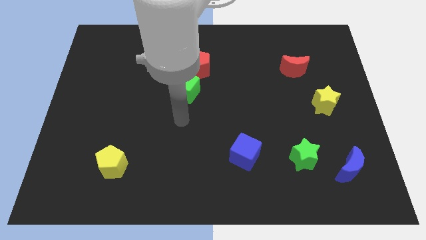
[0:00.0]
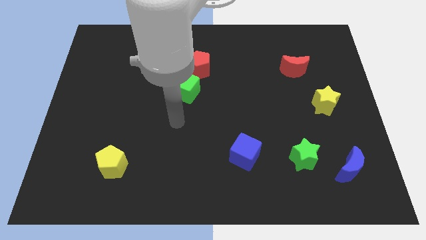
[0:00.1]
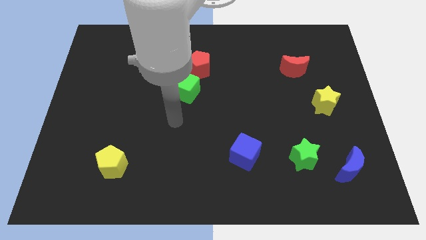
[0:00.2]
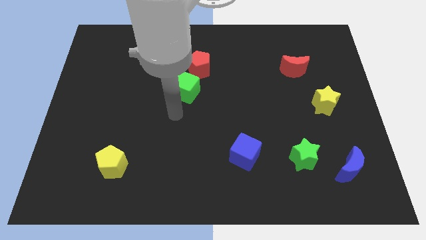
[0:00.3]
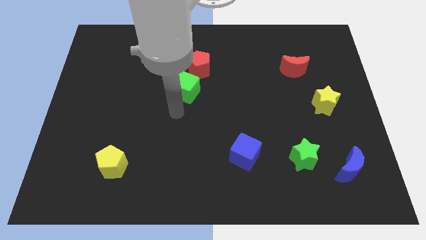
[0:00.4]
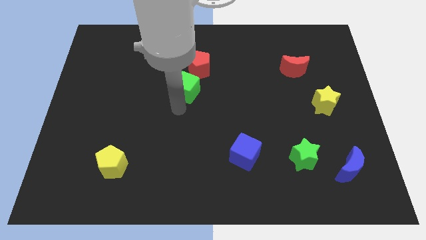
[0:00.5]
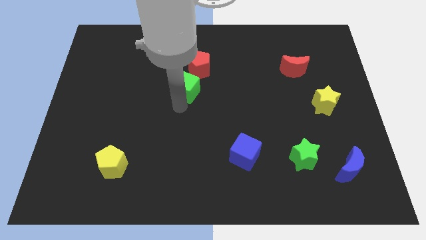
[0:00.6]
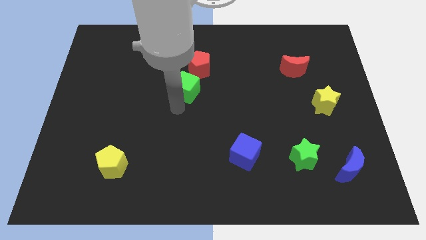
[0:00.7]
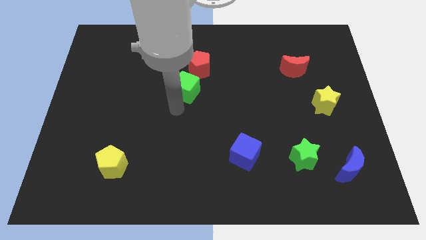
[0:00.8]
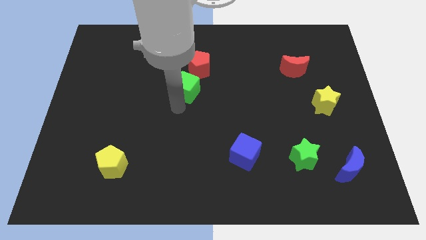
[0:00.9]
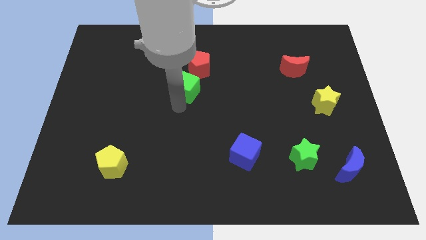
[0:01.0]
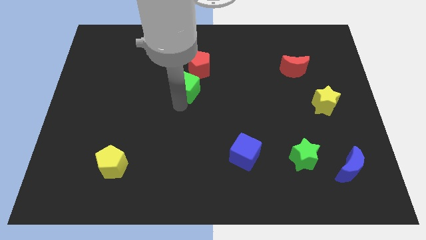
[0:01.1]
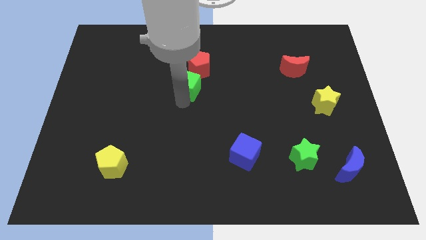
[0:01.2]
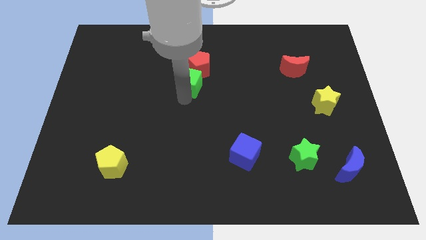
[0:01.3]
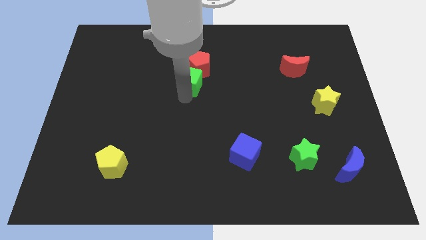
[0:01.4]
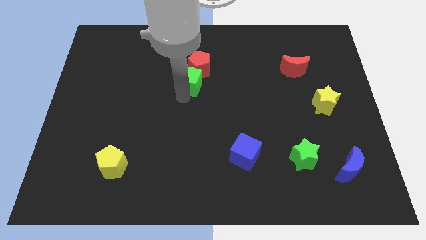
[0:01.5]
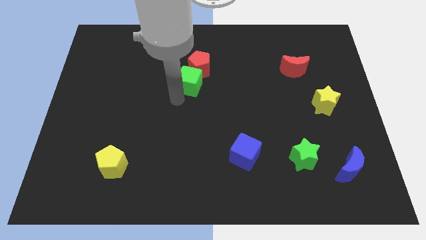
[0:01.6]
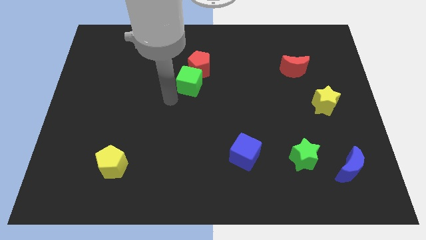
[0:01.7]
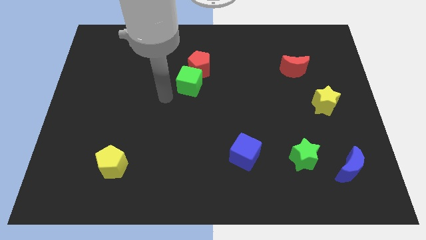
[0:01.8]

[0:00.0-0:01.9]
push the green cube into the red pentagon

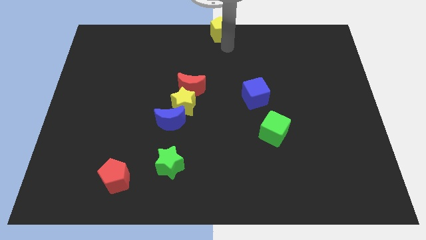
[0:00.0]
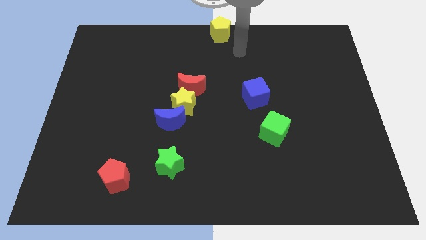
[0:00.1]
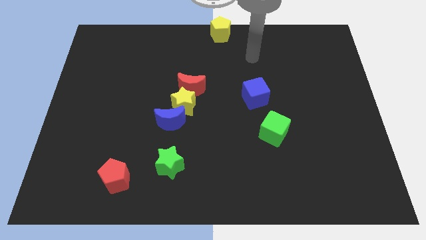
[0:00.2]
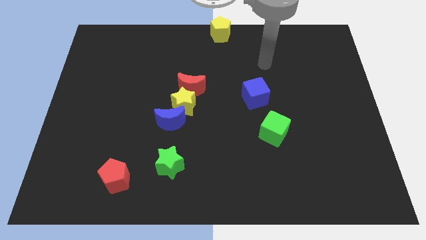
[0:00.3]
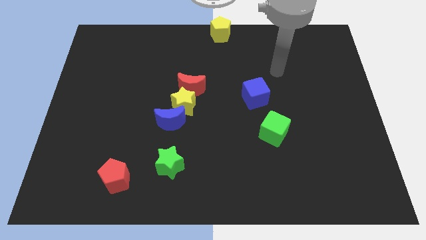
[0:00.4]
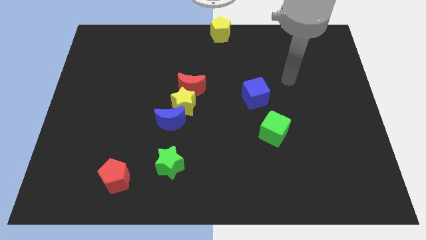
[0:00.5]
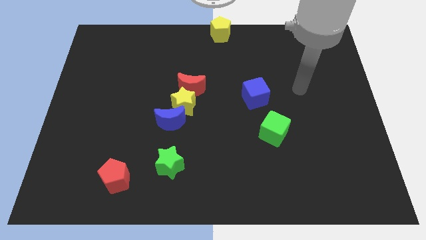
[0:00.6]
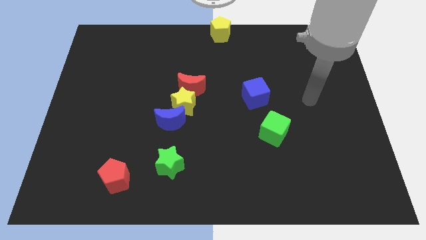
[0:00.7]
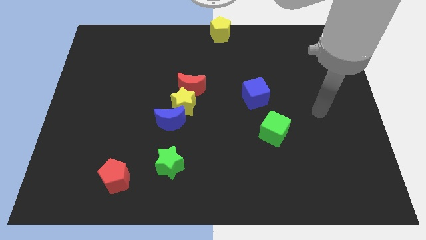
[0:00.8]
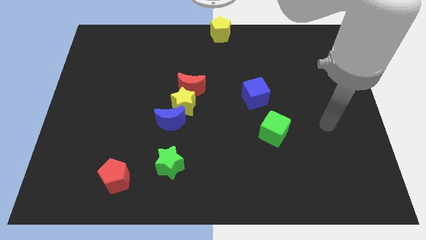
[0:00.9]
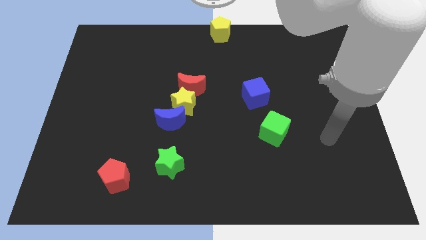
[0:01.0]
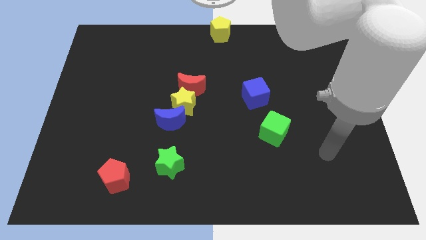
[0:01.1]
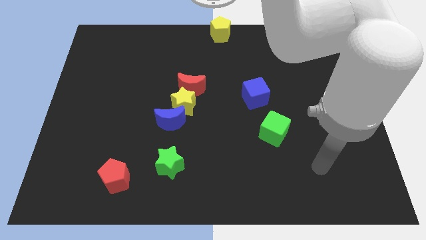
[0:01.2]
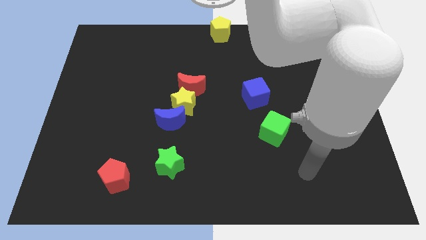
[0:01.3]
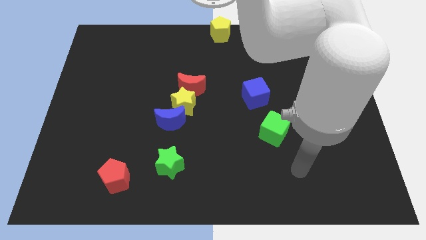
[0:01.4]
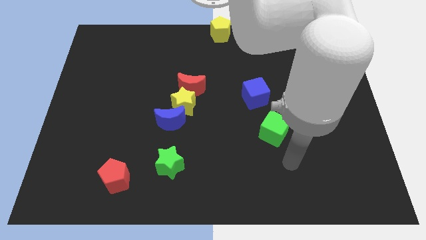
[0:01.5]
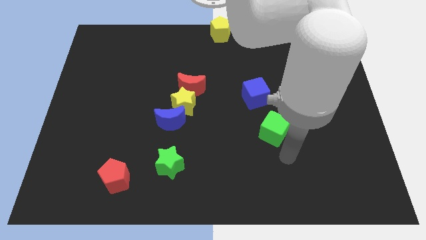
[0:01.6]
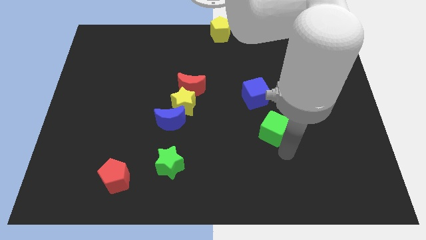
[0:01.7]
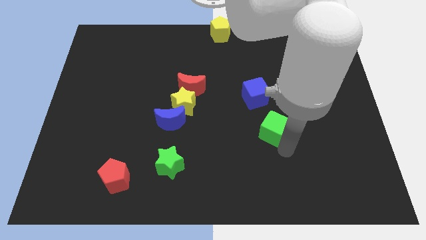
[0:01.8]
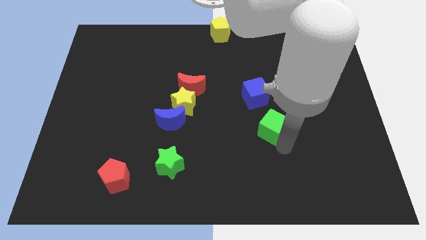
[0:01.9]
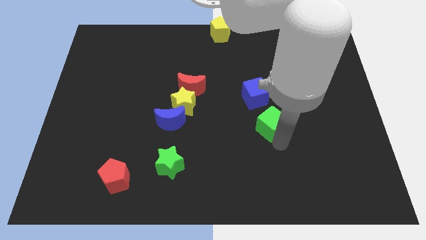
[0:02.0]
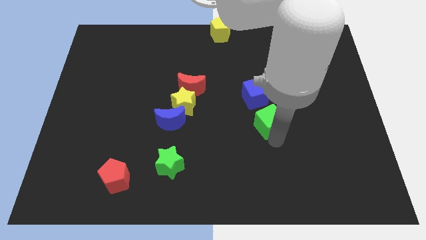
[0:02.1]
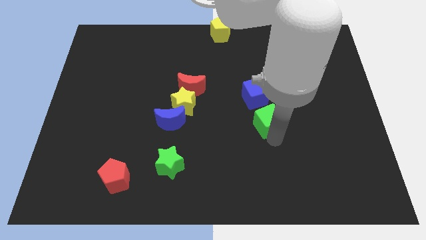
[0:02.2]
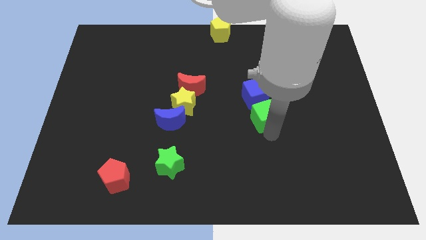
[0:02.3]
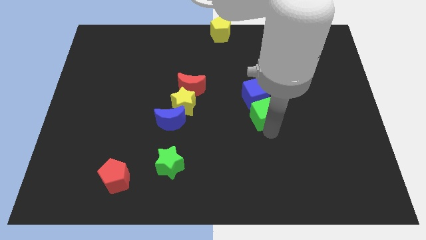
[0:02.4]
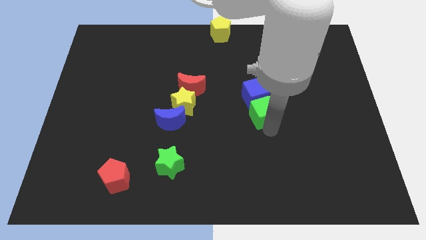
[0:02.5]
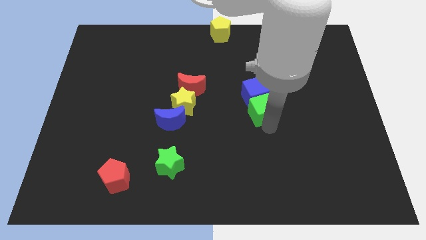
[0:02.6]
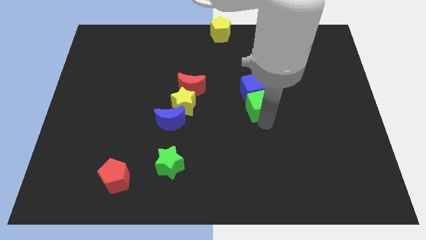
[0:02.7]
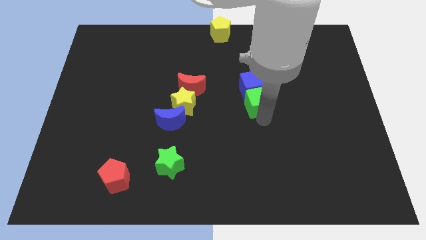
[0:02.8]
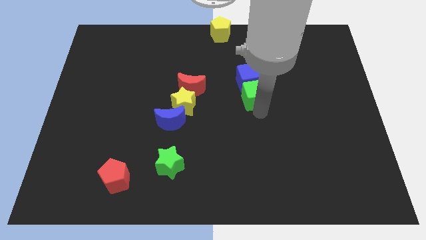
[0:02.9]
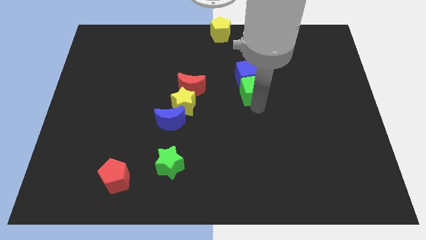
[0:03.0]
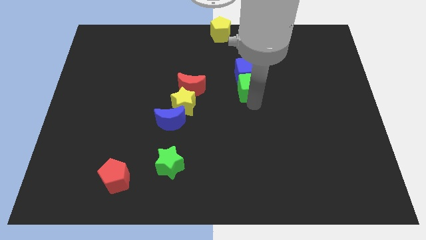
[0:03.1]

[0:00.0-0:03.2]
push the green cube into the blue cube

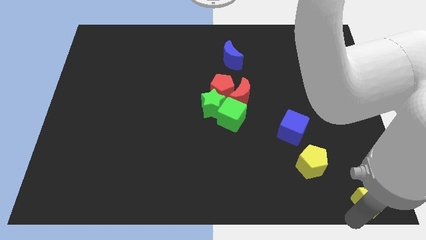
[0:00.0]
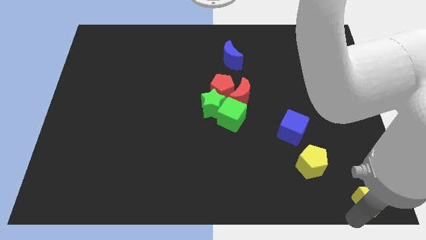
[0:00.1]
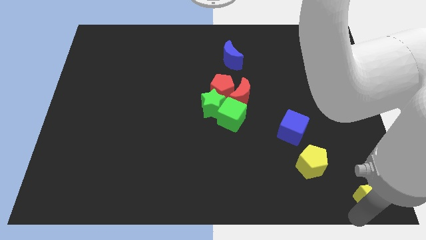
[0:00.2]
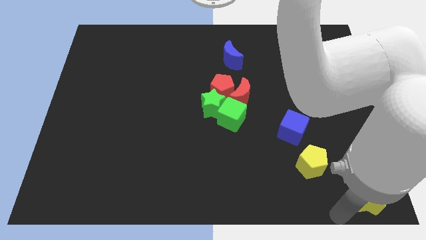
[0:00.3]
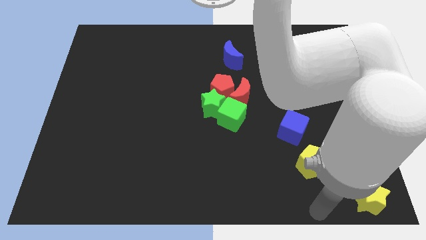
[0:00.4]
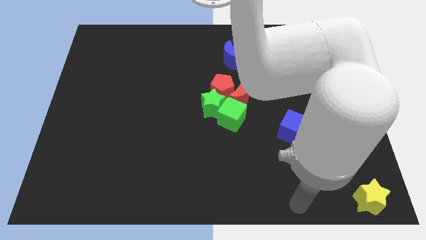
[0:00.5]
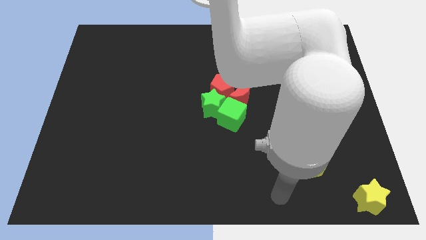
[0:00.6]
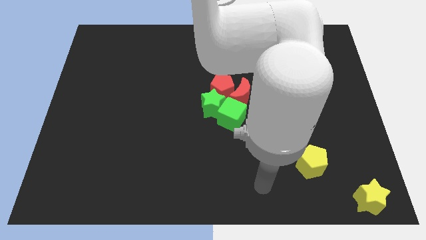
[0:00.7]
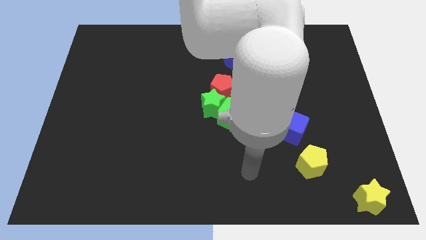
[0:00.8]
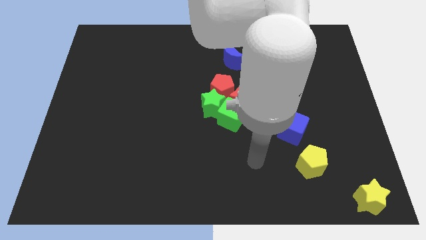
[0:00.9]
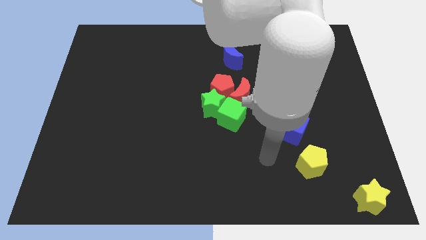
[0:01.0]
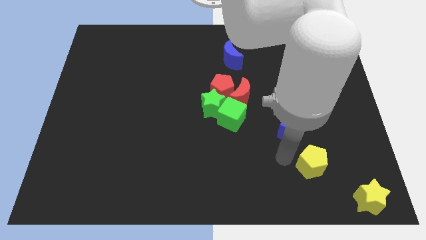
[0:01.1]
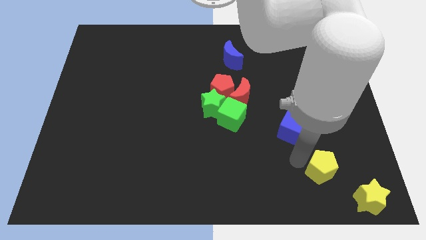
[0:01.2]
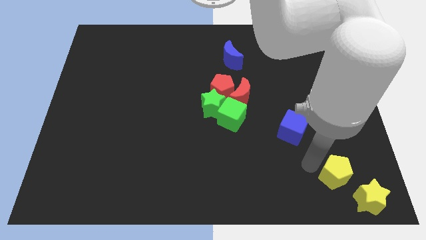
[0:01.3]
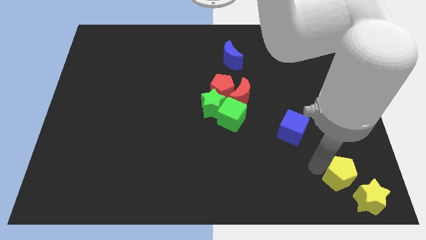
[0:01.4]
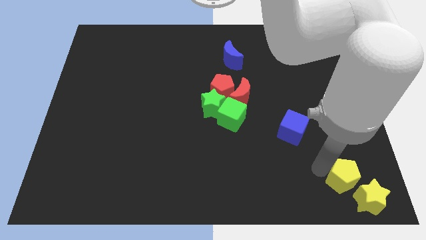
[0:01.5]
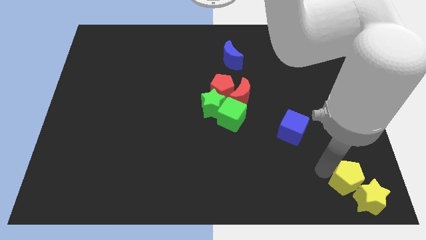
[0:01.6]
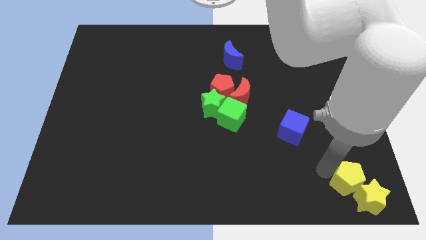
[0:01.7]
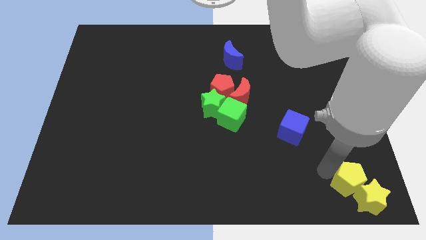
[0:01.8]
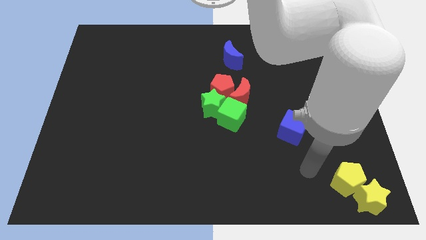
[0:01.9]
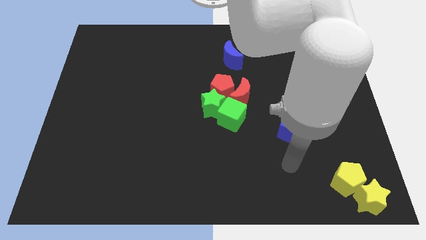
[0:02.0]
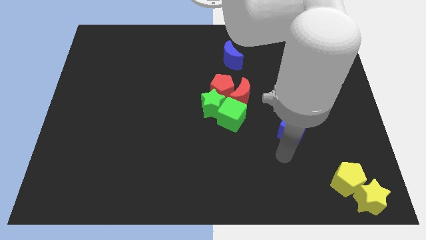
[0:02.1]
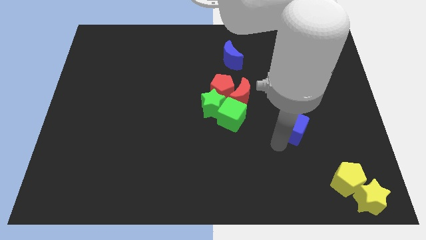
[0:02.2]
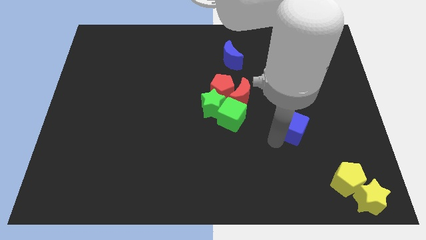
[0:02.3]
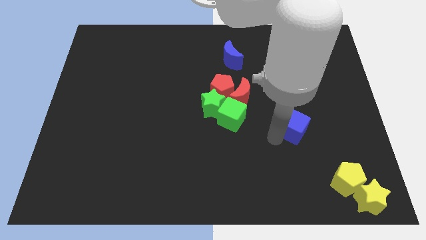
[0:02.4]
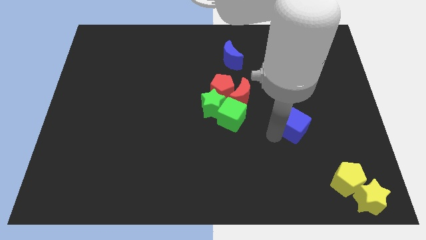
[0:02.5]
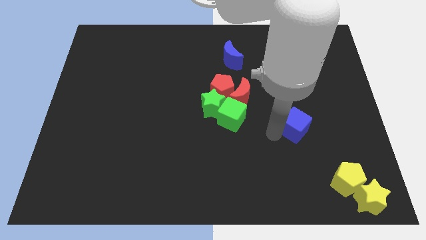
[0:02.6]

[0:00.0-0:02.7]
push the yellow pentagon into the yellow star

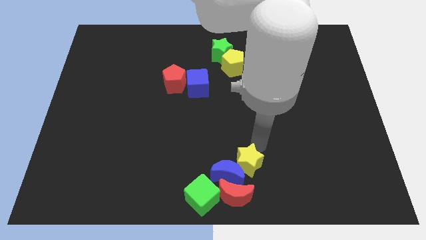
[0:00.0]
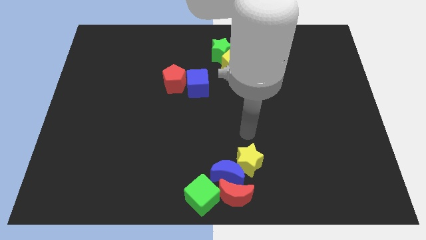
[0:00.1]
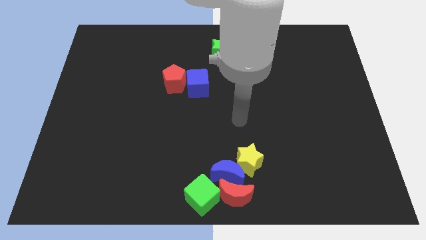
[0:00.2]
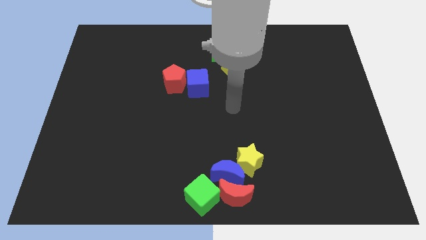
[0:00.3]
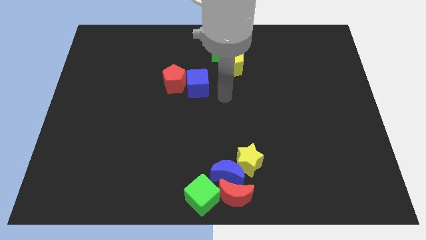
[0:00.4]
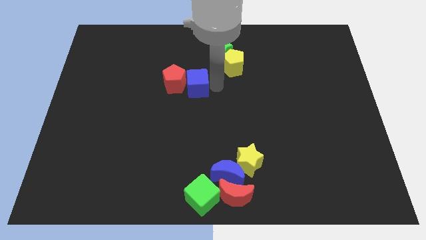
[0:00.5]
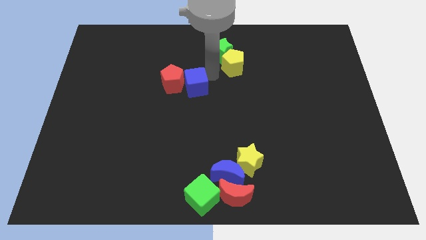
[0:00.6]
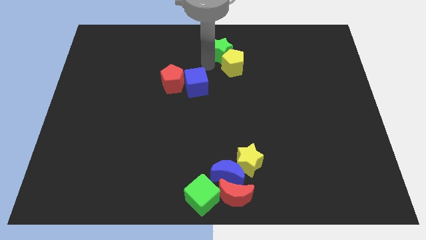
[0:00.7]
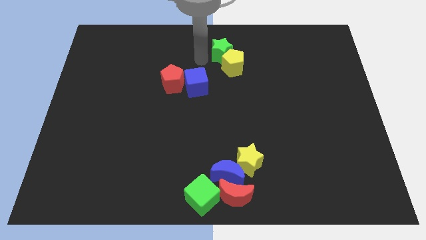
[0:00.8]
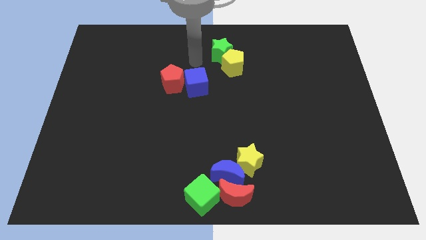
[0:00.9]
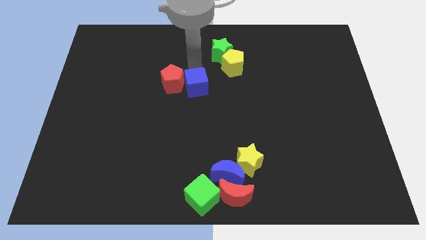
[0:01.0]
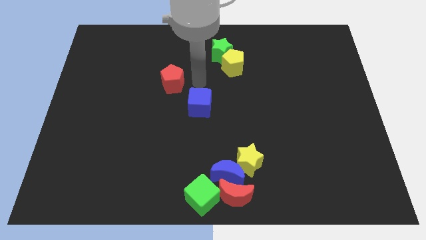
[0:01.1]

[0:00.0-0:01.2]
touch the blue cube with your arm
